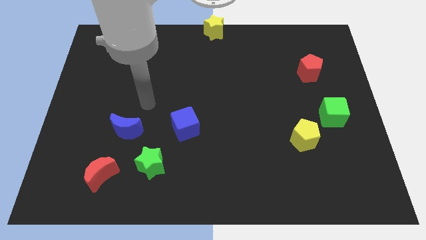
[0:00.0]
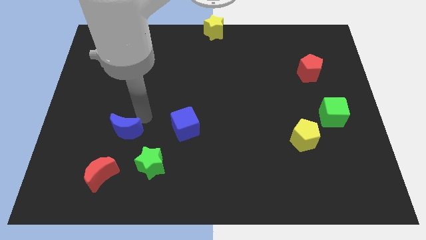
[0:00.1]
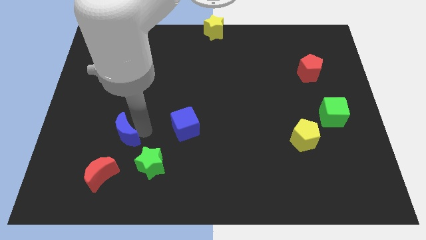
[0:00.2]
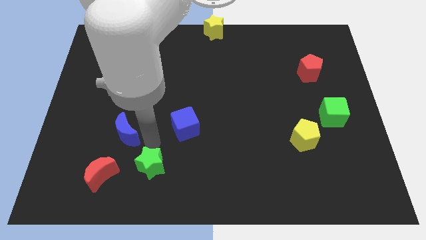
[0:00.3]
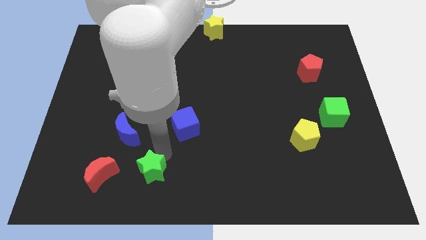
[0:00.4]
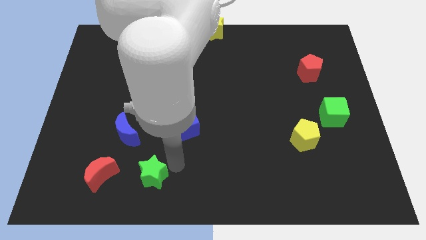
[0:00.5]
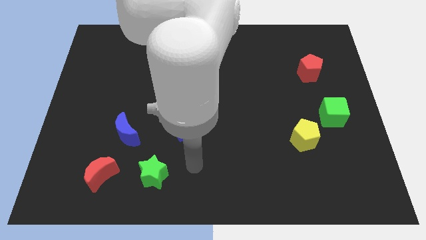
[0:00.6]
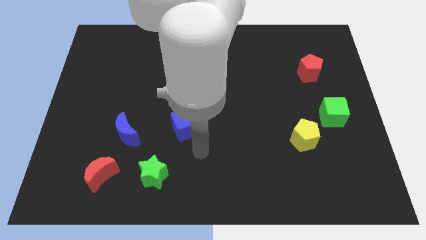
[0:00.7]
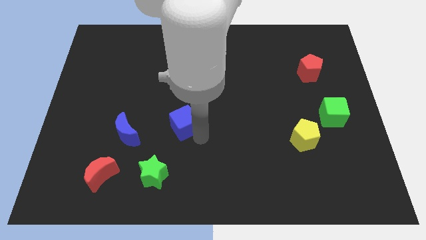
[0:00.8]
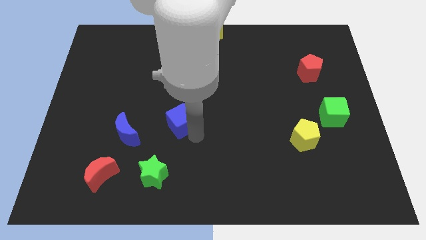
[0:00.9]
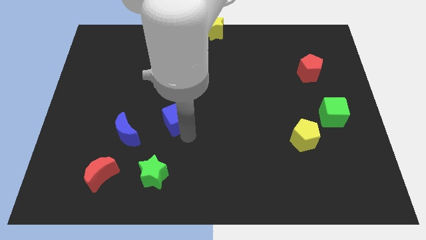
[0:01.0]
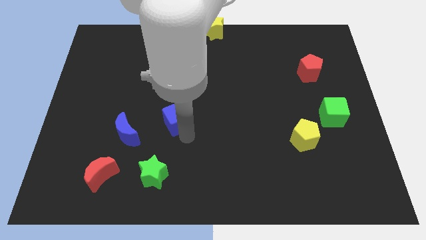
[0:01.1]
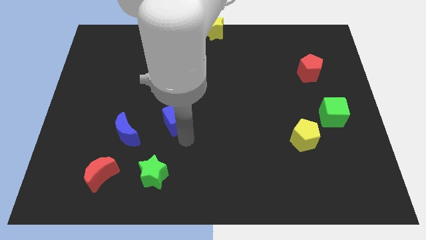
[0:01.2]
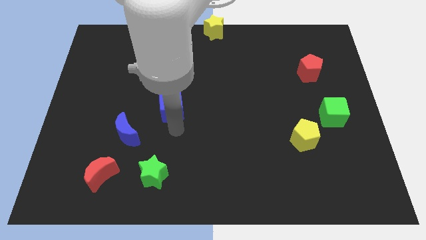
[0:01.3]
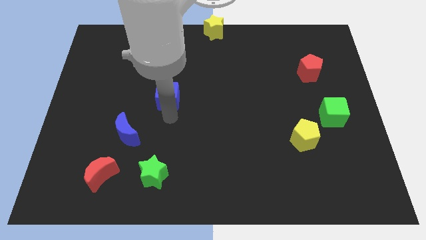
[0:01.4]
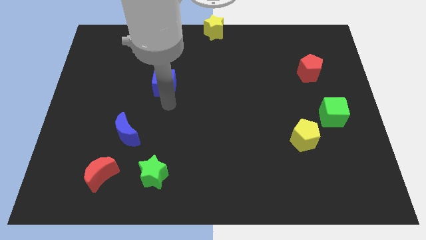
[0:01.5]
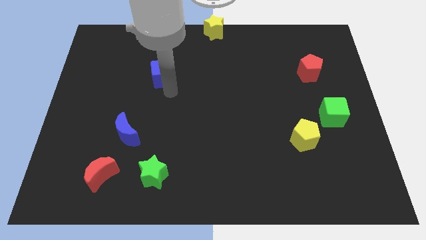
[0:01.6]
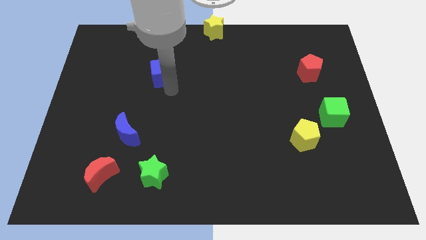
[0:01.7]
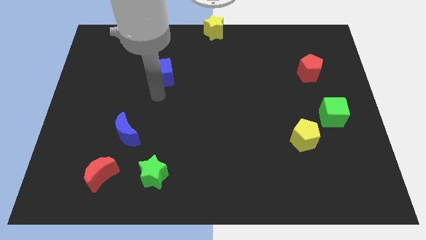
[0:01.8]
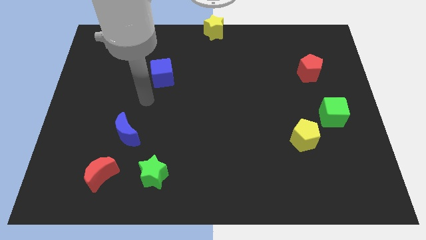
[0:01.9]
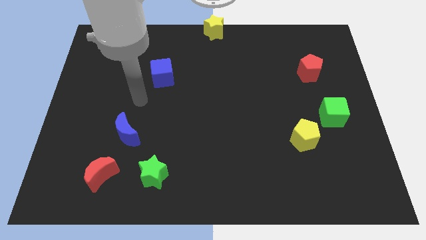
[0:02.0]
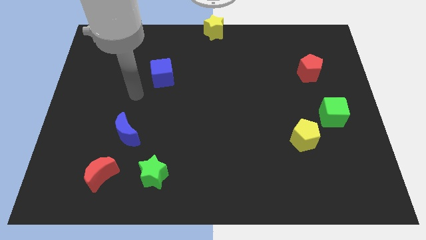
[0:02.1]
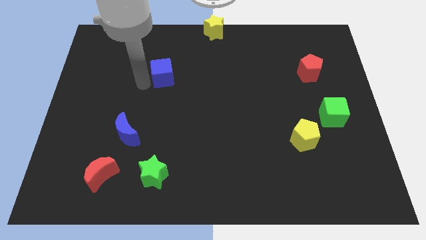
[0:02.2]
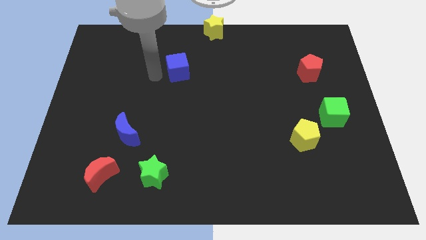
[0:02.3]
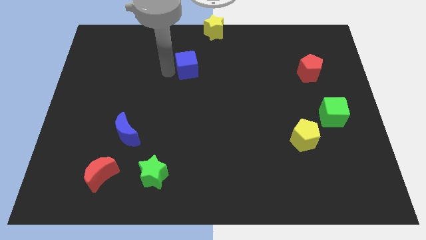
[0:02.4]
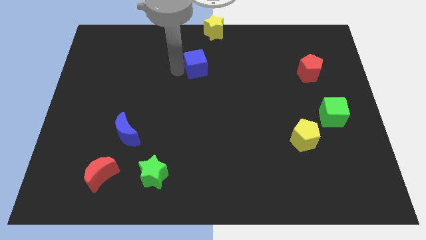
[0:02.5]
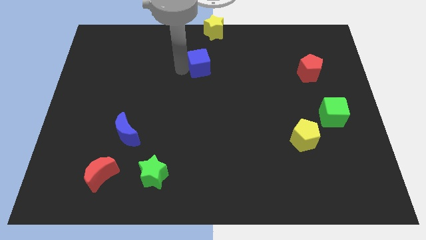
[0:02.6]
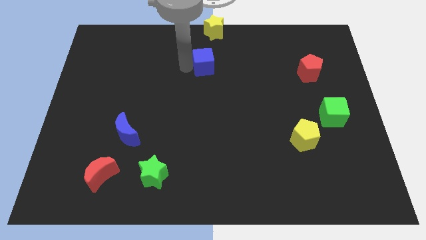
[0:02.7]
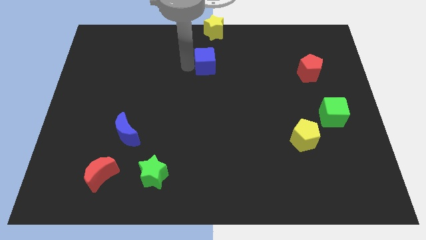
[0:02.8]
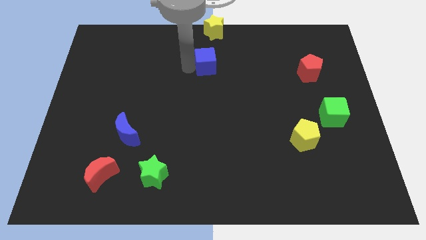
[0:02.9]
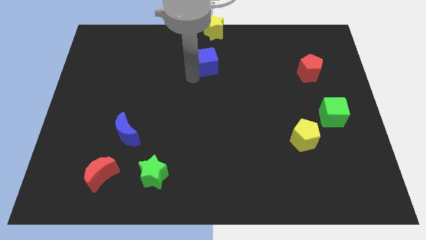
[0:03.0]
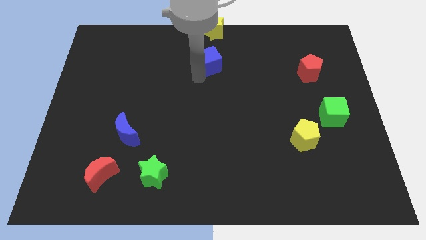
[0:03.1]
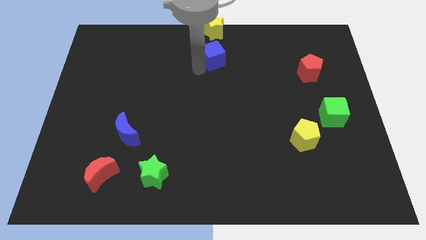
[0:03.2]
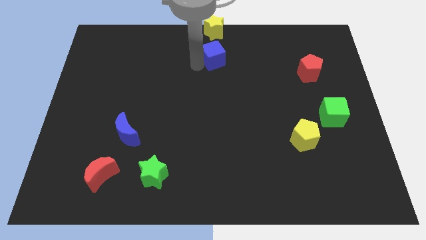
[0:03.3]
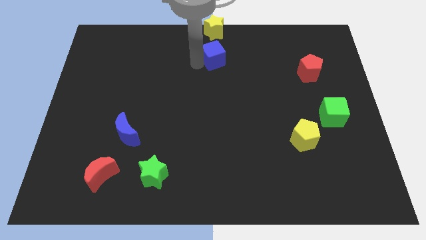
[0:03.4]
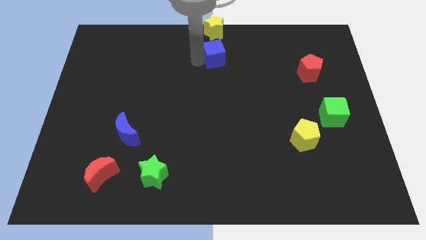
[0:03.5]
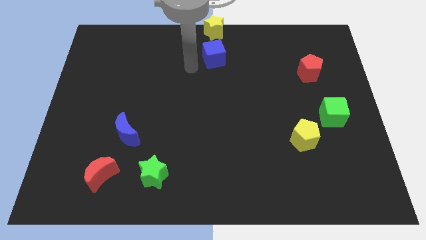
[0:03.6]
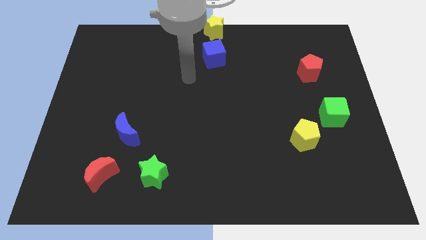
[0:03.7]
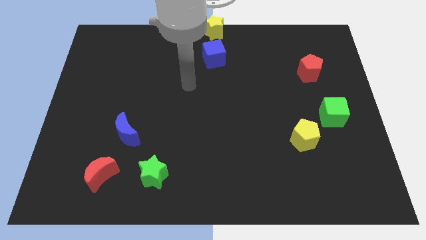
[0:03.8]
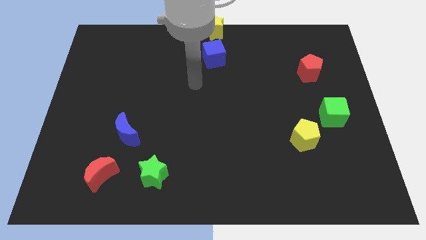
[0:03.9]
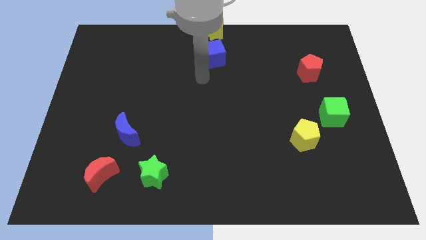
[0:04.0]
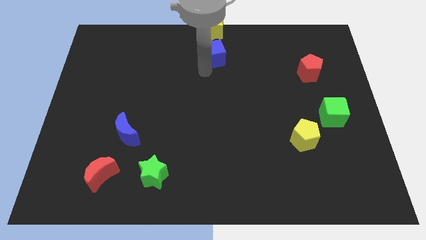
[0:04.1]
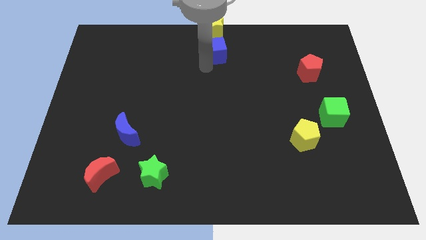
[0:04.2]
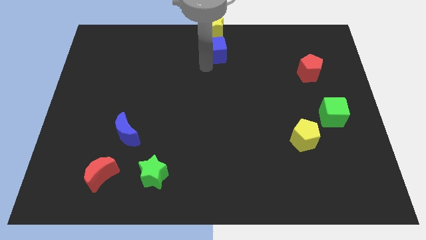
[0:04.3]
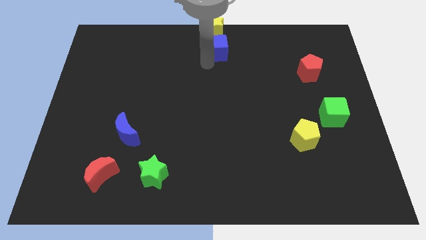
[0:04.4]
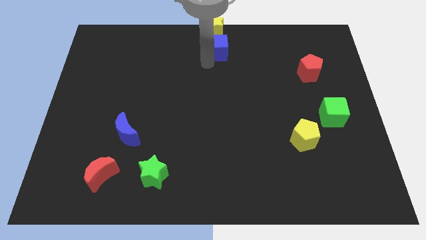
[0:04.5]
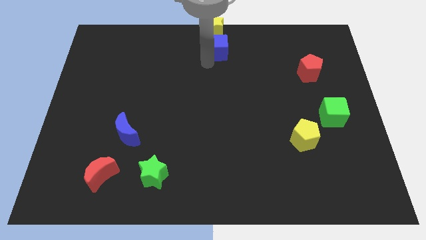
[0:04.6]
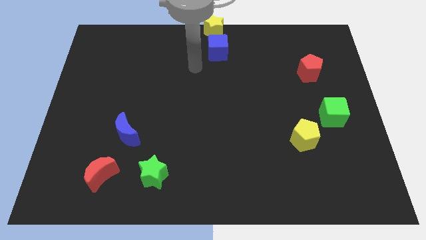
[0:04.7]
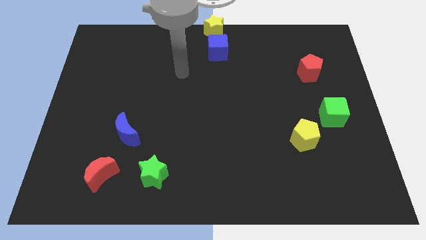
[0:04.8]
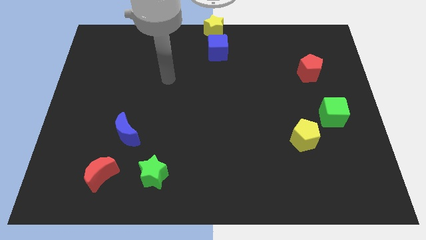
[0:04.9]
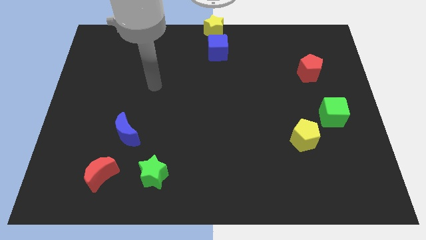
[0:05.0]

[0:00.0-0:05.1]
push the blue cube at the bottom of the yellow star

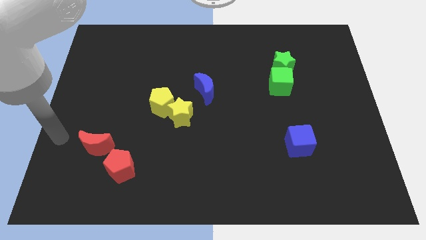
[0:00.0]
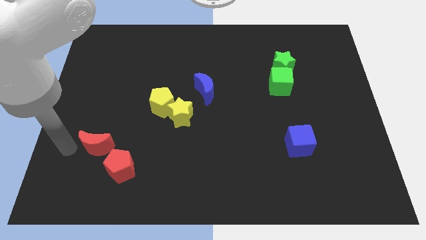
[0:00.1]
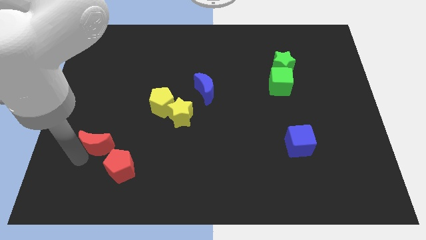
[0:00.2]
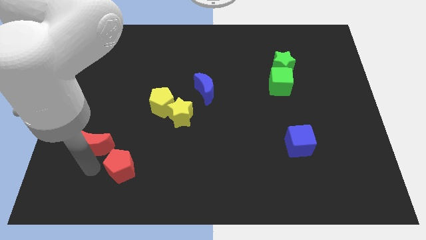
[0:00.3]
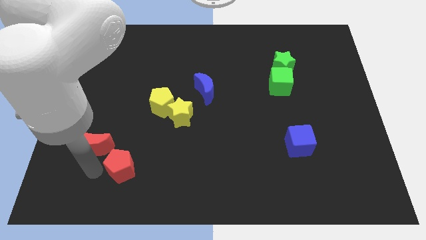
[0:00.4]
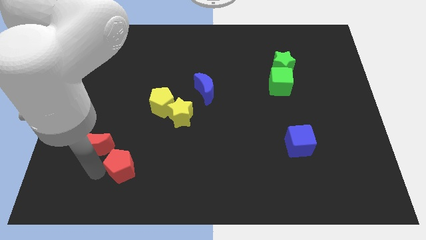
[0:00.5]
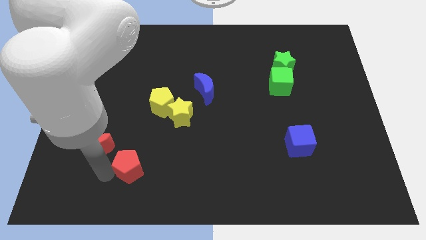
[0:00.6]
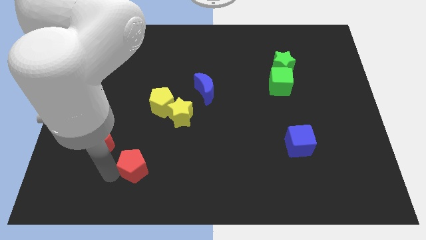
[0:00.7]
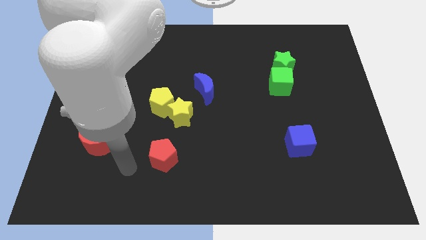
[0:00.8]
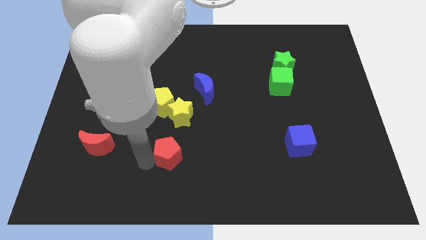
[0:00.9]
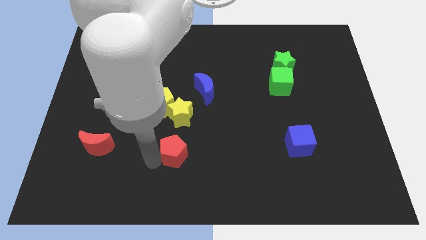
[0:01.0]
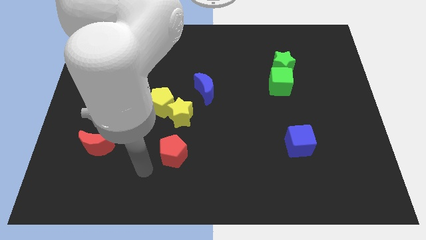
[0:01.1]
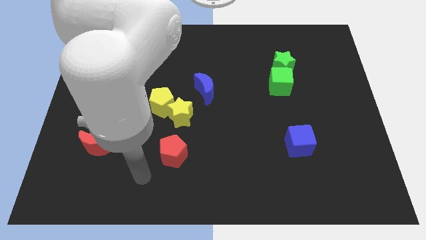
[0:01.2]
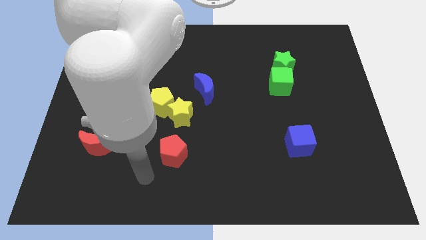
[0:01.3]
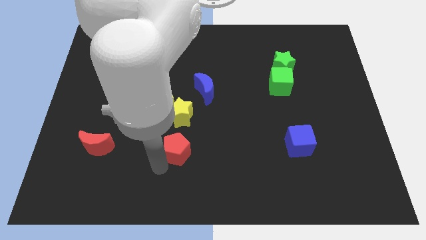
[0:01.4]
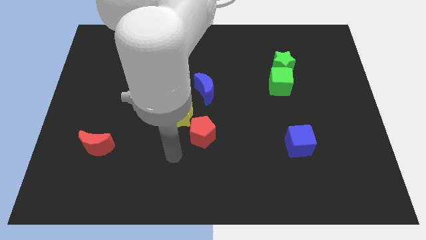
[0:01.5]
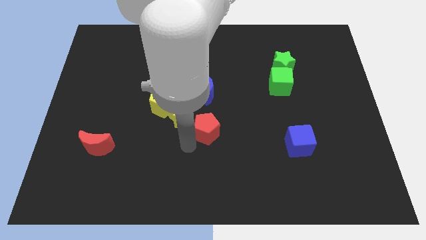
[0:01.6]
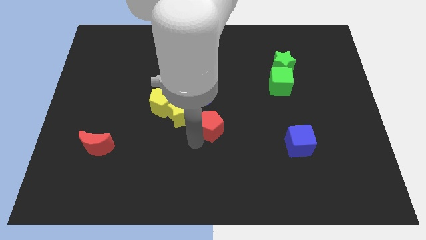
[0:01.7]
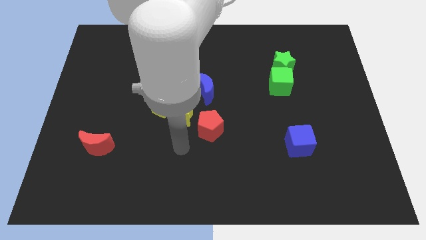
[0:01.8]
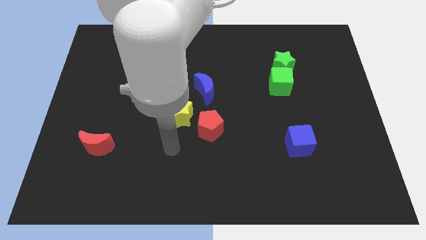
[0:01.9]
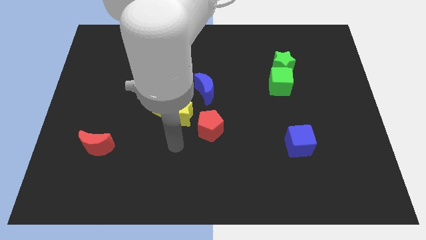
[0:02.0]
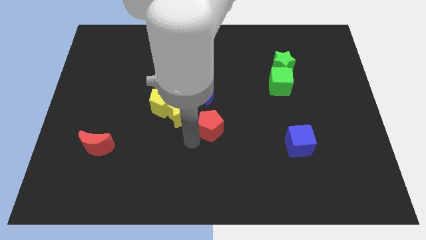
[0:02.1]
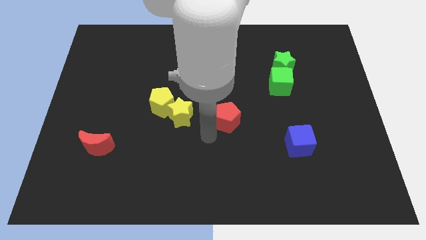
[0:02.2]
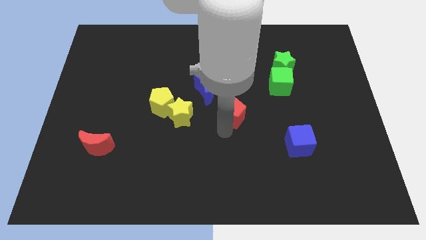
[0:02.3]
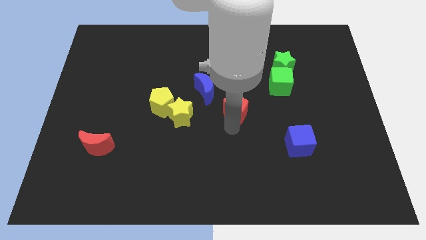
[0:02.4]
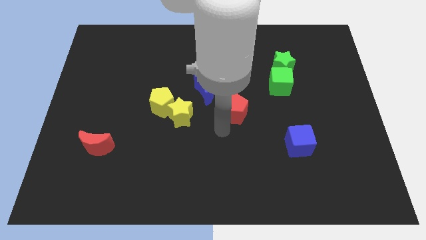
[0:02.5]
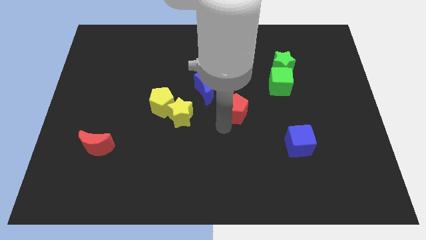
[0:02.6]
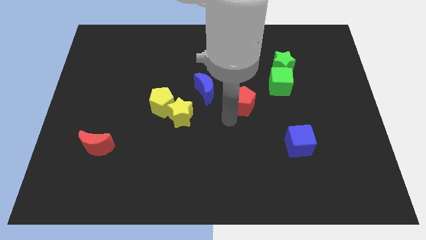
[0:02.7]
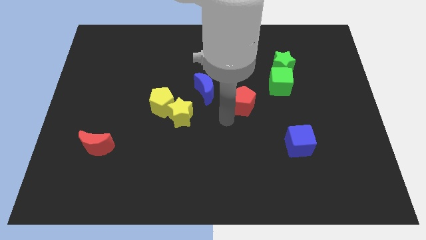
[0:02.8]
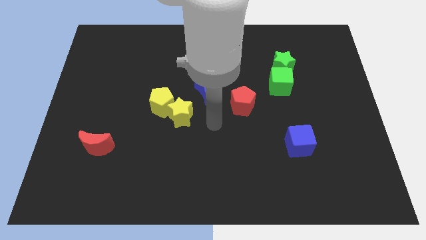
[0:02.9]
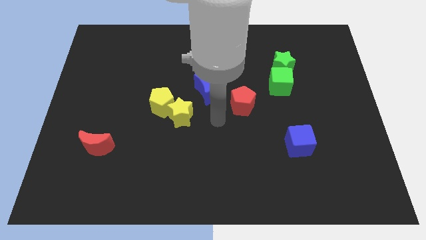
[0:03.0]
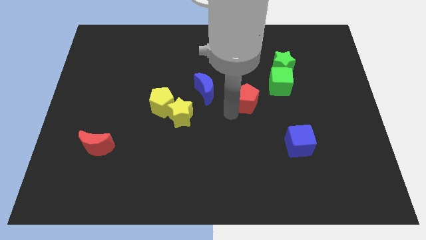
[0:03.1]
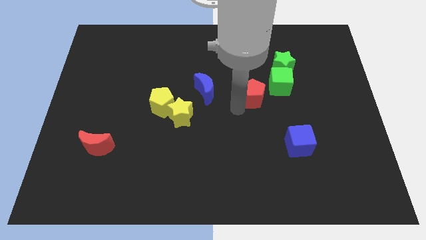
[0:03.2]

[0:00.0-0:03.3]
separate the red pentagon from the red crescent

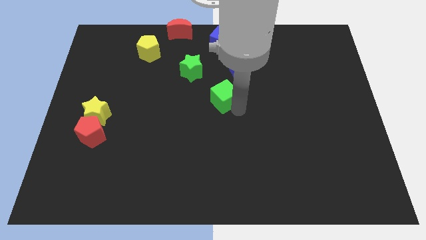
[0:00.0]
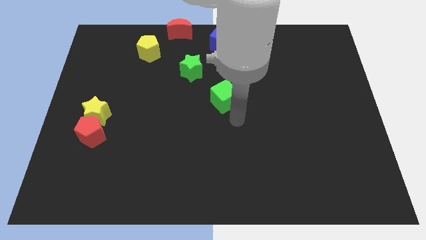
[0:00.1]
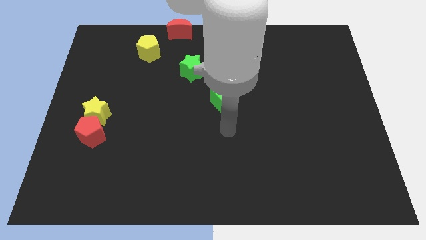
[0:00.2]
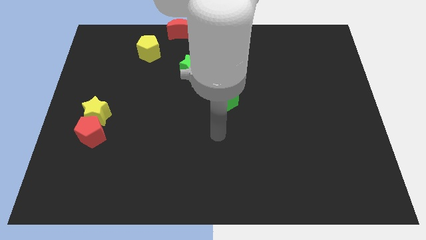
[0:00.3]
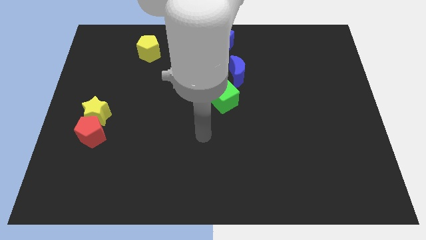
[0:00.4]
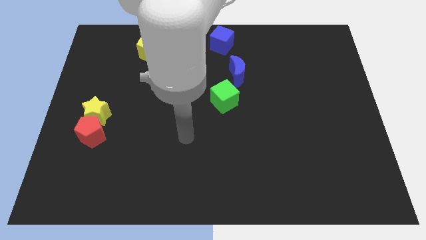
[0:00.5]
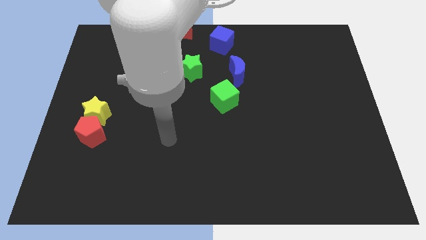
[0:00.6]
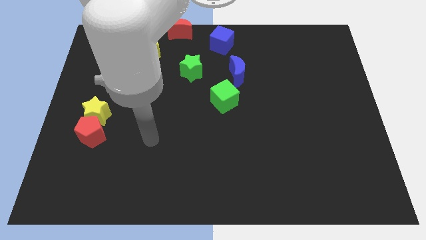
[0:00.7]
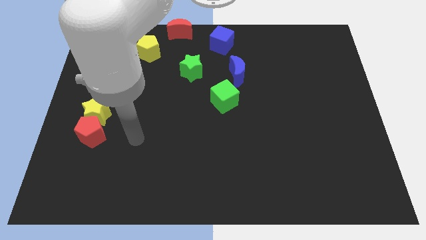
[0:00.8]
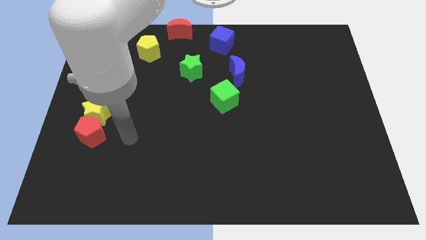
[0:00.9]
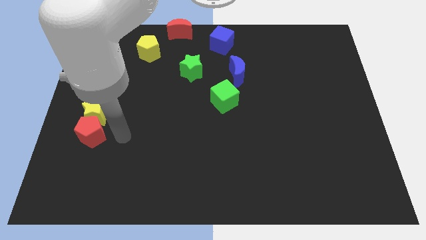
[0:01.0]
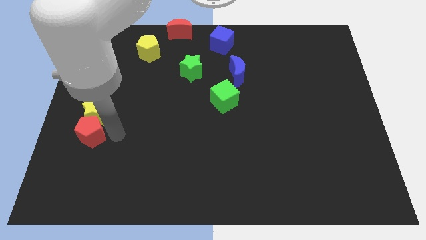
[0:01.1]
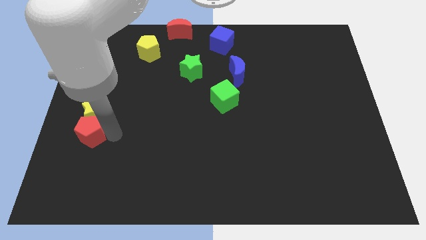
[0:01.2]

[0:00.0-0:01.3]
move your arm away from the green cube
